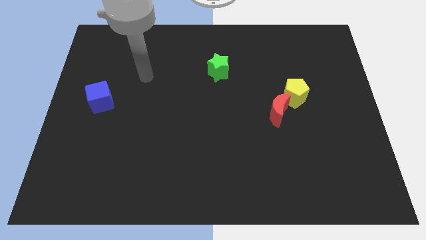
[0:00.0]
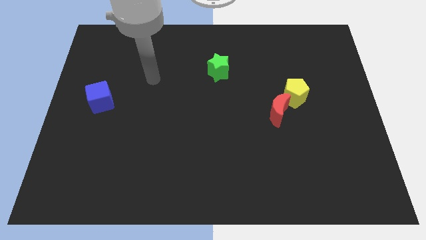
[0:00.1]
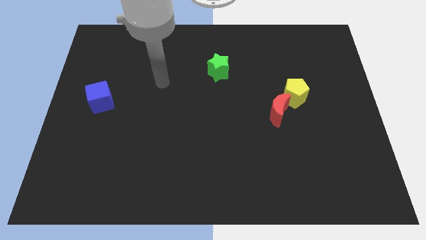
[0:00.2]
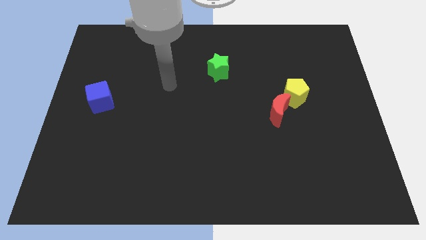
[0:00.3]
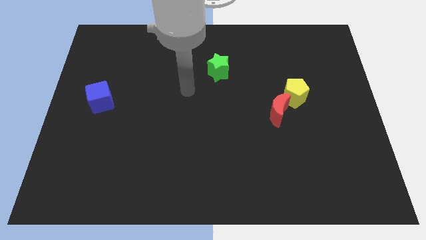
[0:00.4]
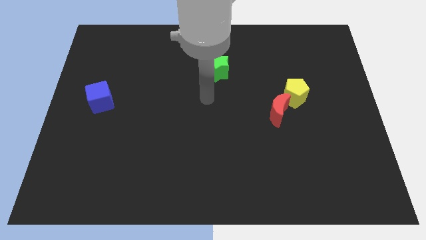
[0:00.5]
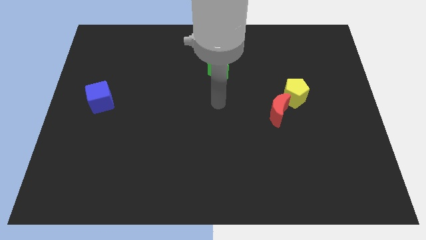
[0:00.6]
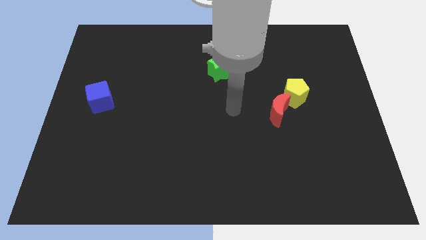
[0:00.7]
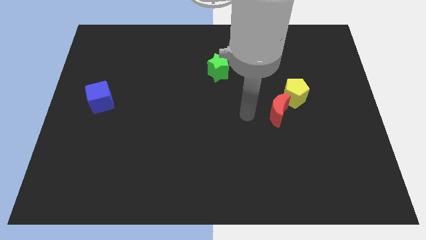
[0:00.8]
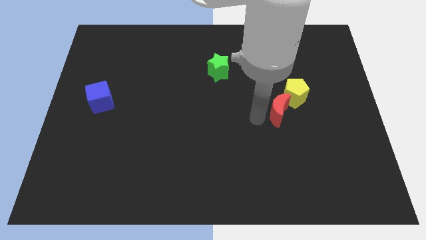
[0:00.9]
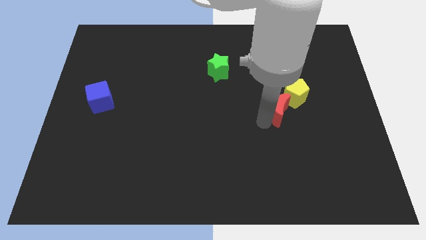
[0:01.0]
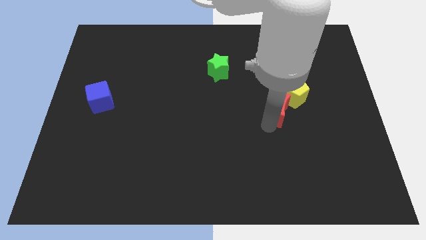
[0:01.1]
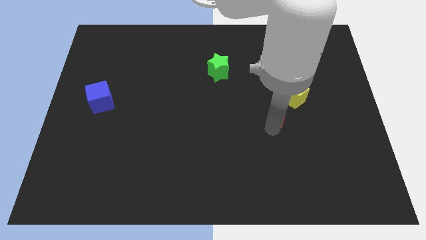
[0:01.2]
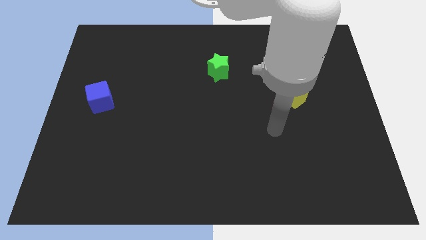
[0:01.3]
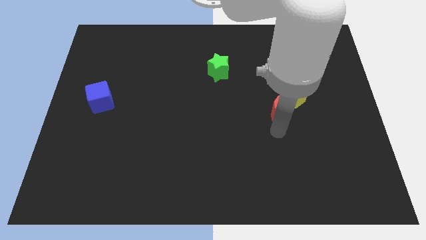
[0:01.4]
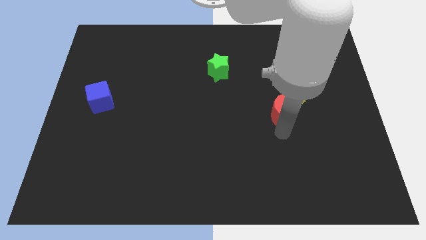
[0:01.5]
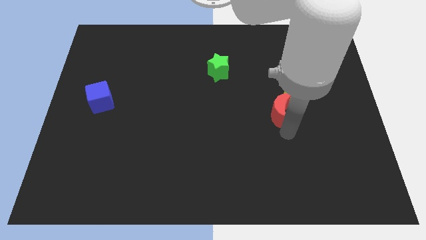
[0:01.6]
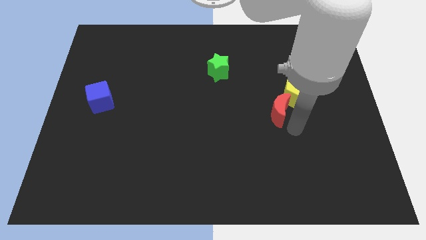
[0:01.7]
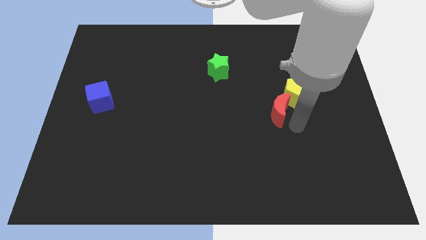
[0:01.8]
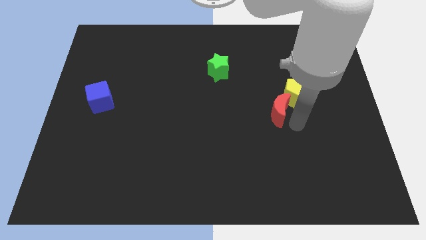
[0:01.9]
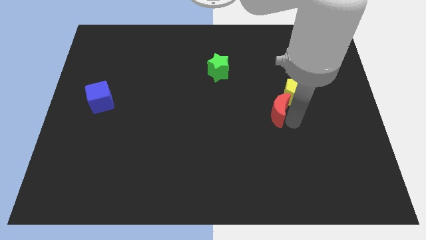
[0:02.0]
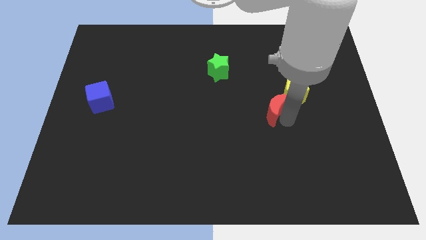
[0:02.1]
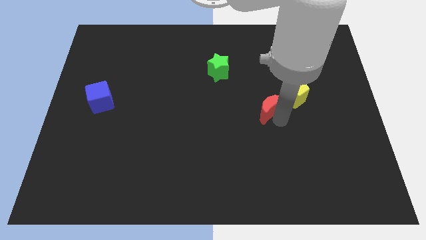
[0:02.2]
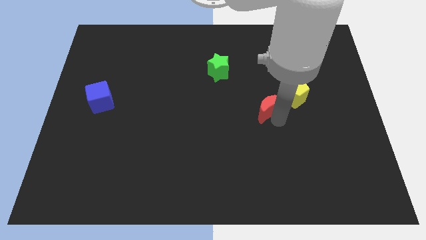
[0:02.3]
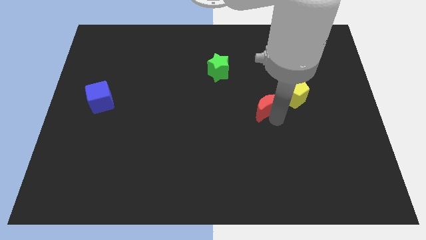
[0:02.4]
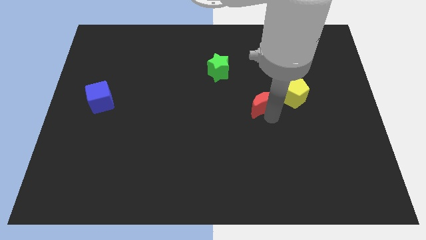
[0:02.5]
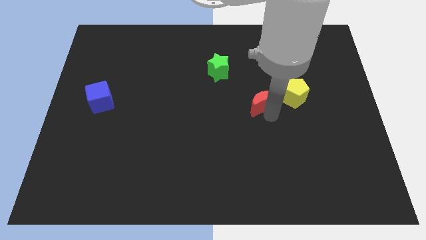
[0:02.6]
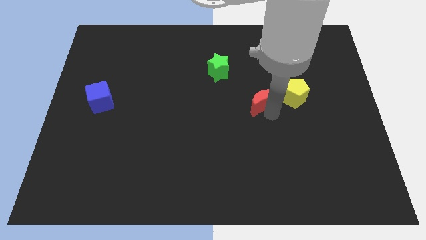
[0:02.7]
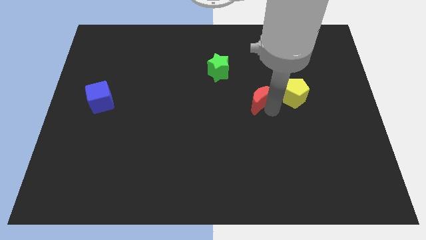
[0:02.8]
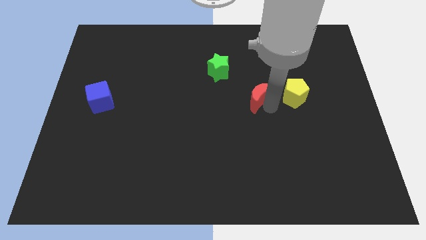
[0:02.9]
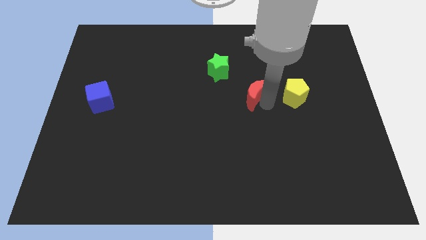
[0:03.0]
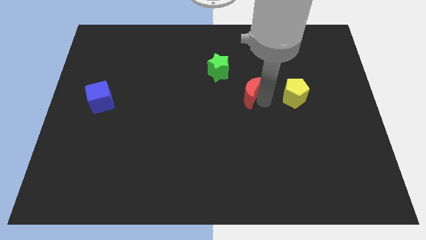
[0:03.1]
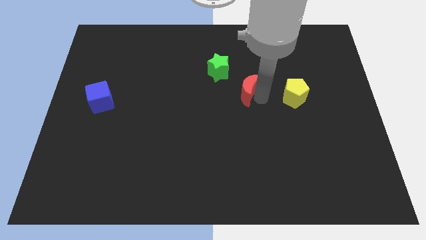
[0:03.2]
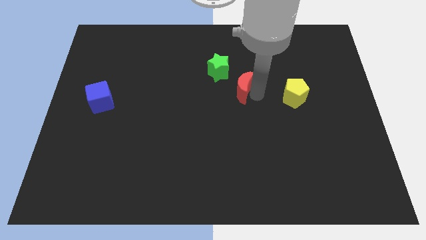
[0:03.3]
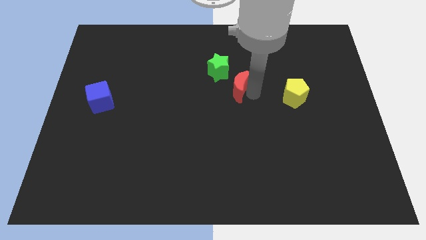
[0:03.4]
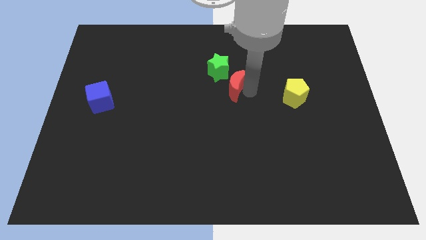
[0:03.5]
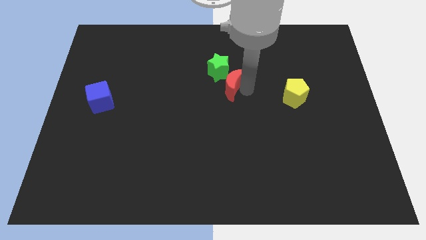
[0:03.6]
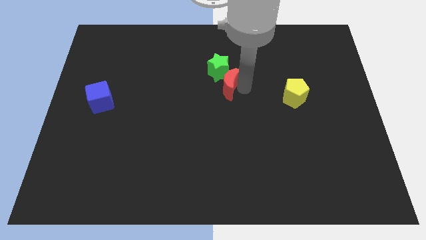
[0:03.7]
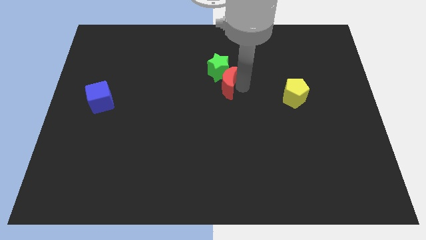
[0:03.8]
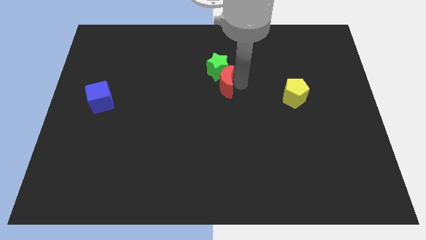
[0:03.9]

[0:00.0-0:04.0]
move the red moon to the green block

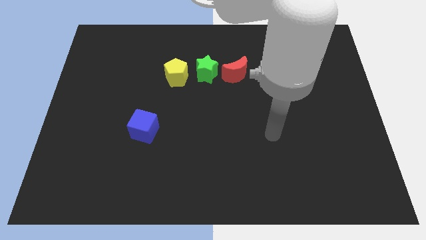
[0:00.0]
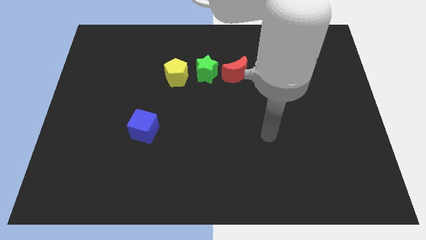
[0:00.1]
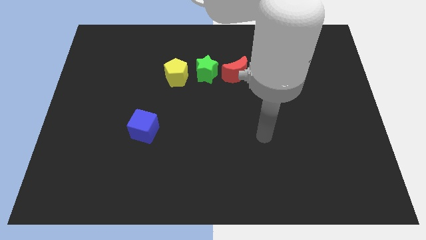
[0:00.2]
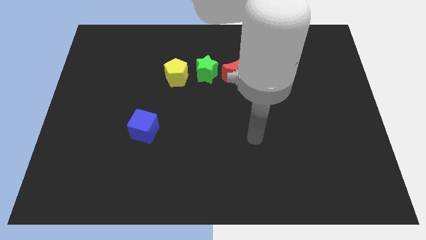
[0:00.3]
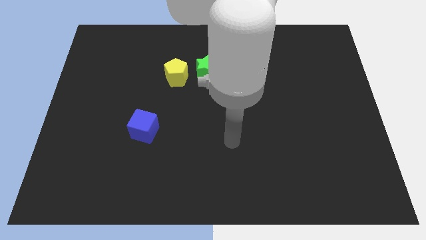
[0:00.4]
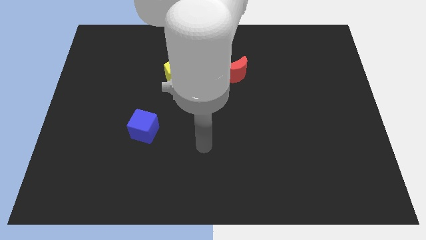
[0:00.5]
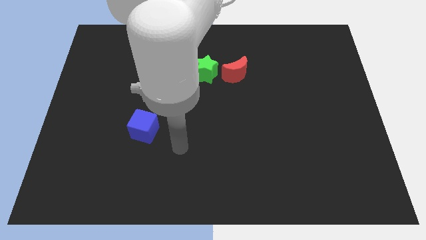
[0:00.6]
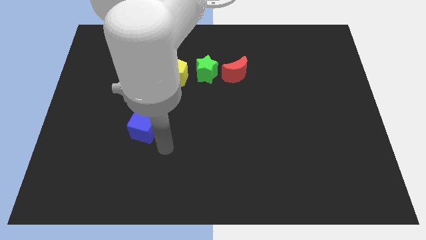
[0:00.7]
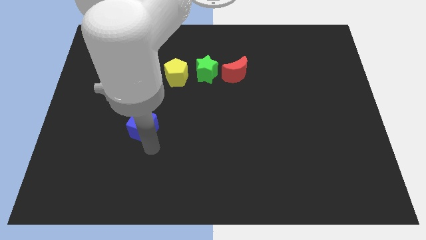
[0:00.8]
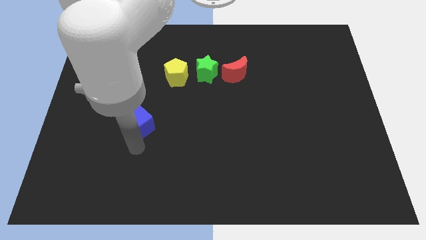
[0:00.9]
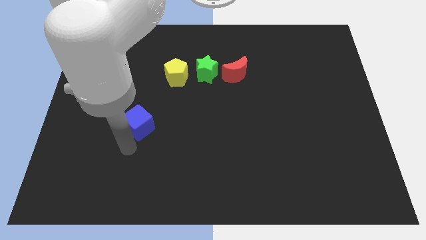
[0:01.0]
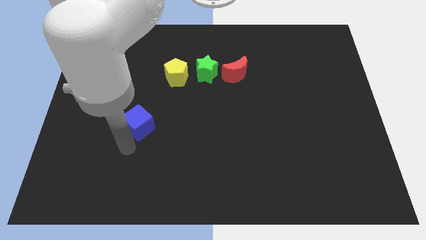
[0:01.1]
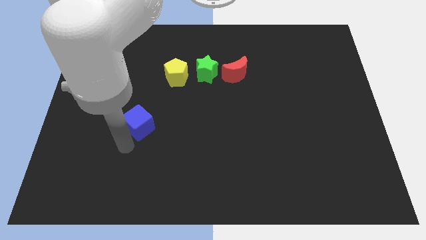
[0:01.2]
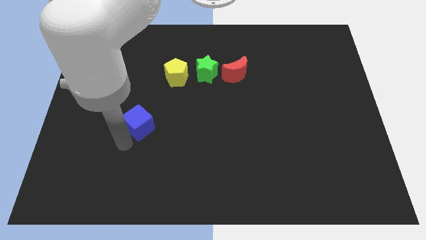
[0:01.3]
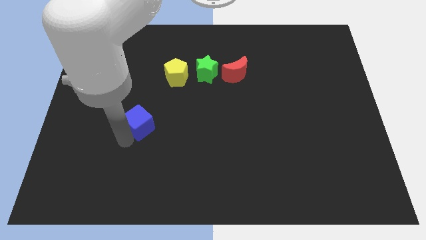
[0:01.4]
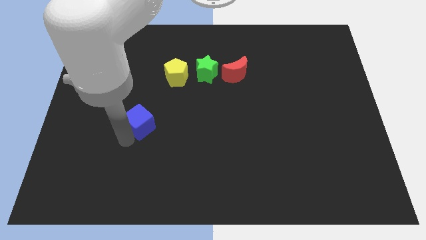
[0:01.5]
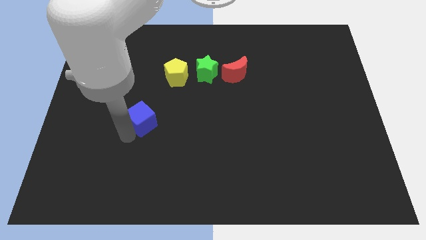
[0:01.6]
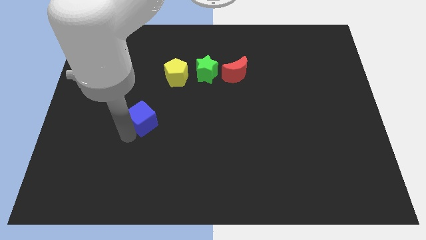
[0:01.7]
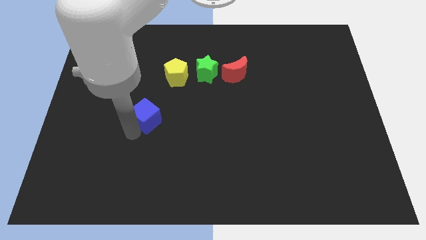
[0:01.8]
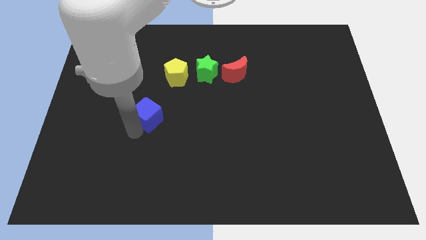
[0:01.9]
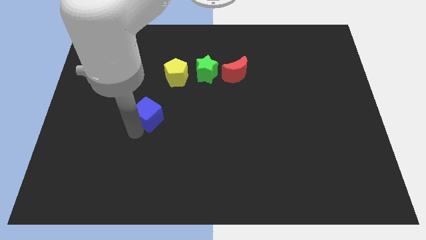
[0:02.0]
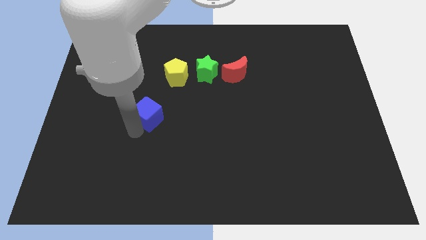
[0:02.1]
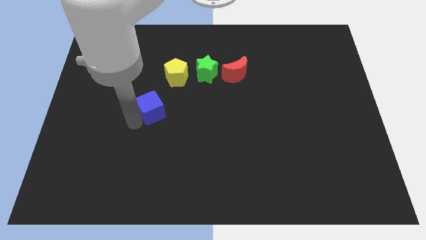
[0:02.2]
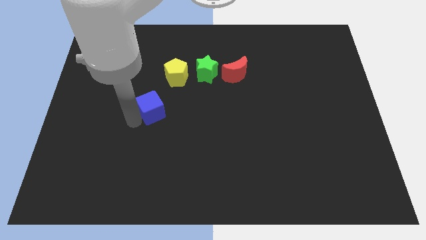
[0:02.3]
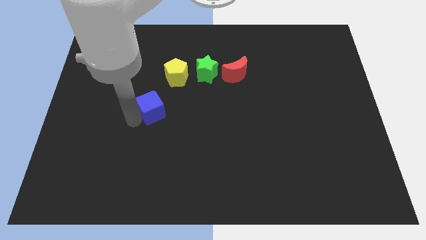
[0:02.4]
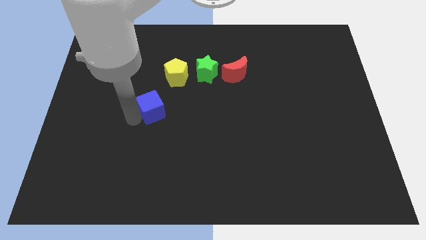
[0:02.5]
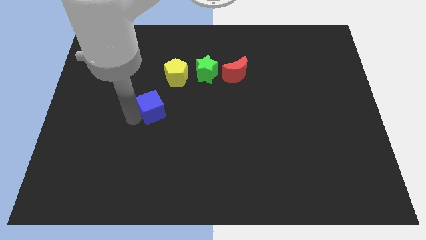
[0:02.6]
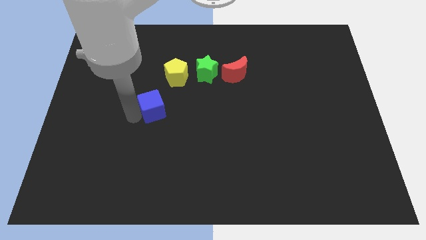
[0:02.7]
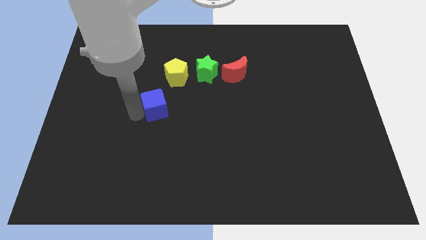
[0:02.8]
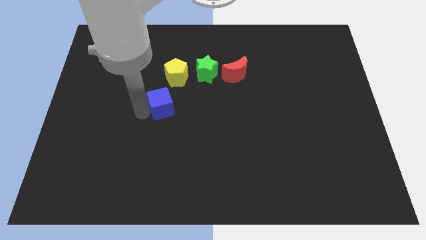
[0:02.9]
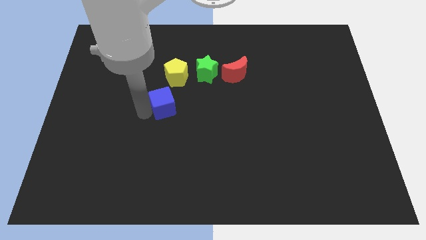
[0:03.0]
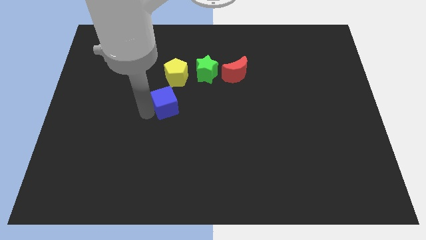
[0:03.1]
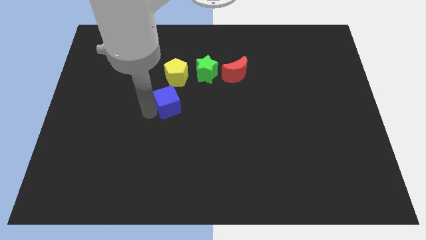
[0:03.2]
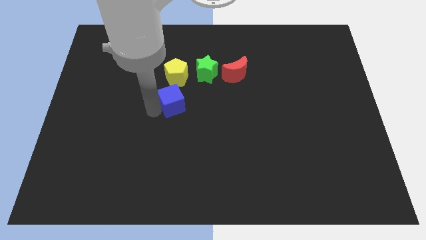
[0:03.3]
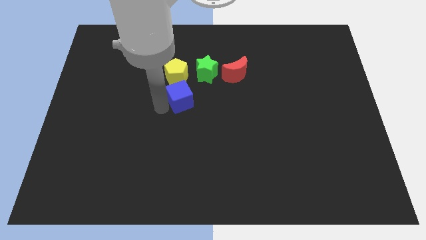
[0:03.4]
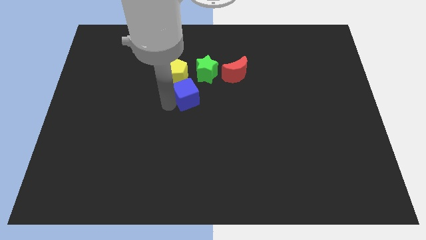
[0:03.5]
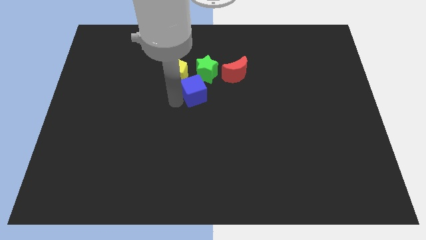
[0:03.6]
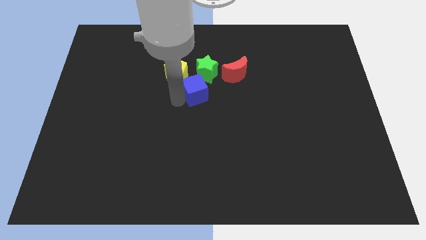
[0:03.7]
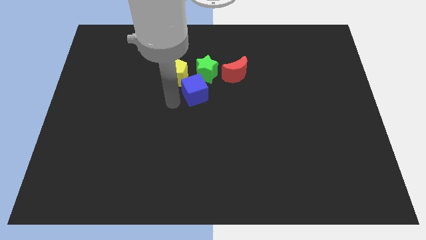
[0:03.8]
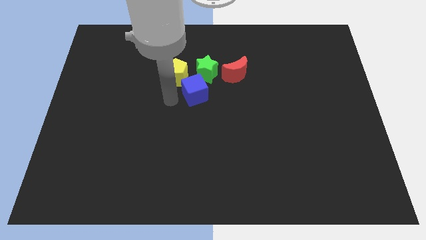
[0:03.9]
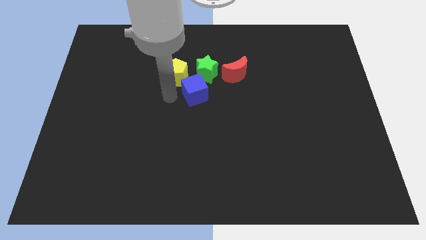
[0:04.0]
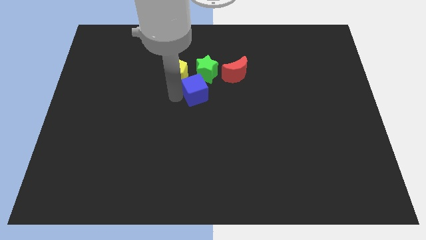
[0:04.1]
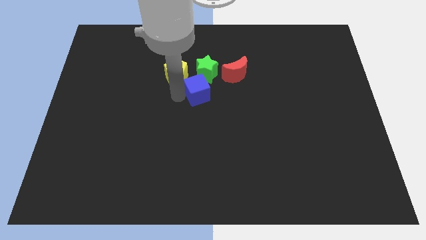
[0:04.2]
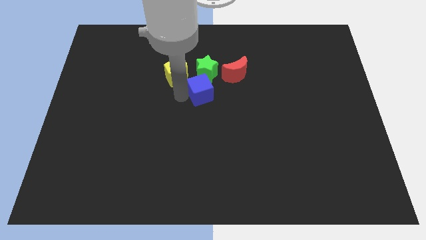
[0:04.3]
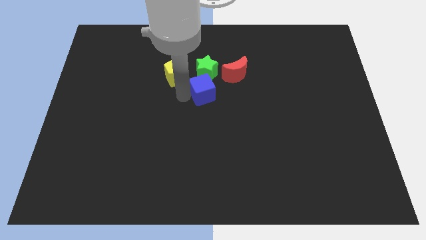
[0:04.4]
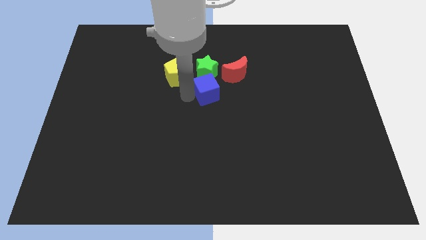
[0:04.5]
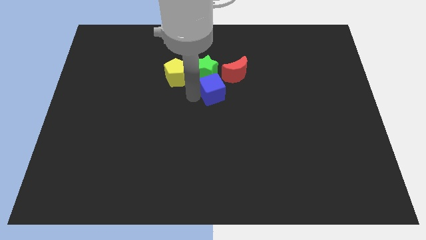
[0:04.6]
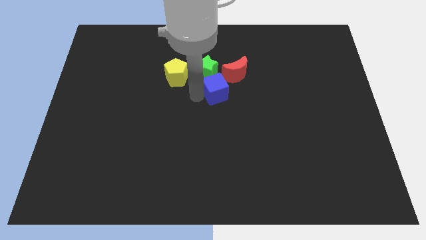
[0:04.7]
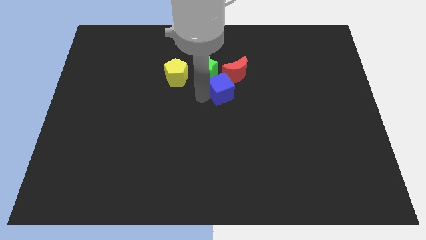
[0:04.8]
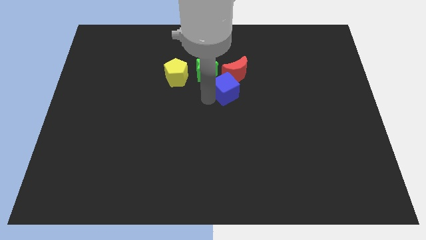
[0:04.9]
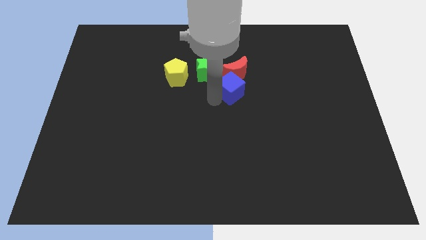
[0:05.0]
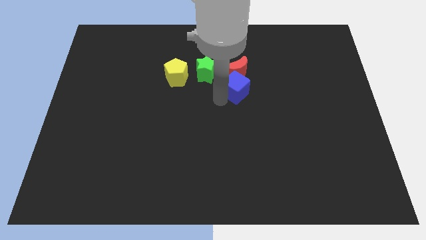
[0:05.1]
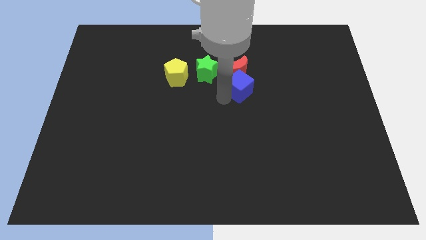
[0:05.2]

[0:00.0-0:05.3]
slide the blue cube next to the red moon
